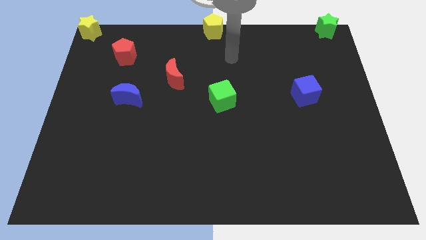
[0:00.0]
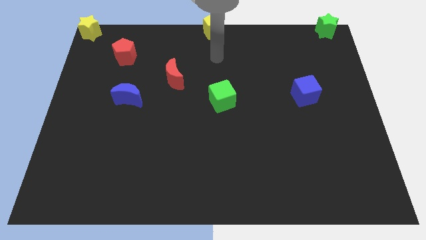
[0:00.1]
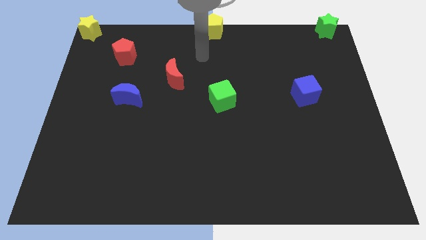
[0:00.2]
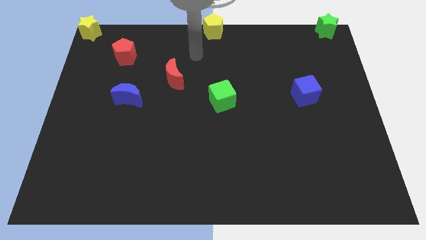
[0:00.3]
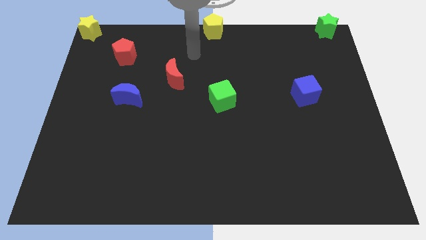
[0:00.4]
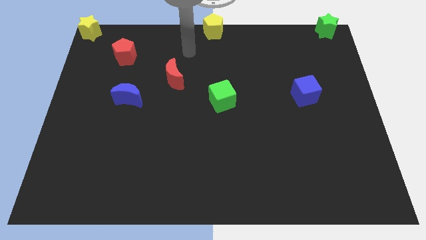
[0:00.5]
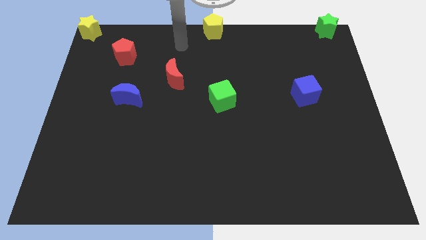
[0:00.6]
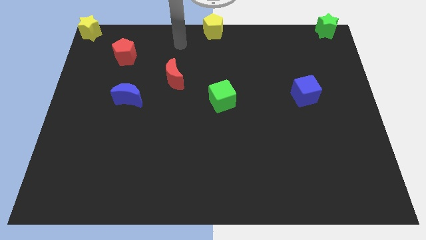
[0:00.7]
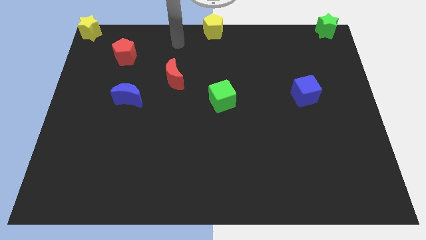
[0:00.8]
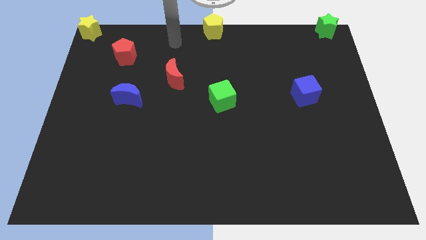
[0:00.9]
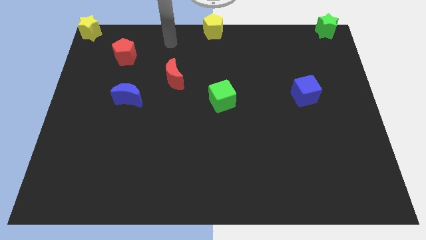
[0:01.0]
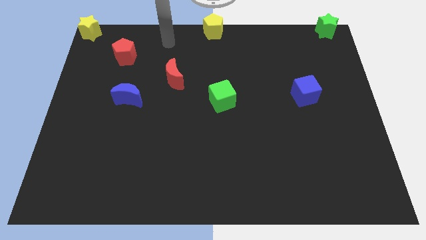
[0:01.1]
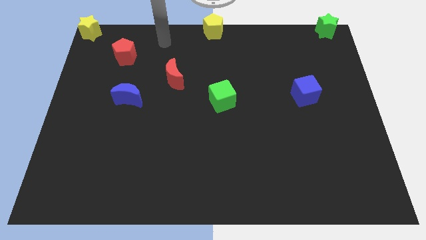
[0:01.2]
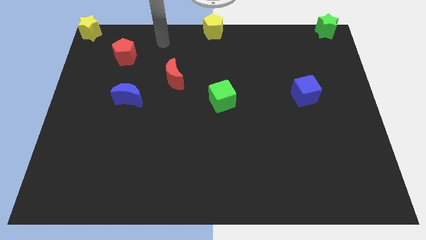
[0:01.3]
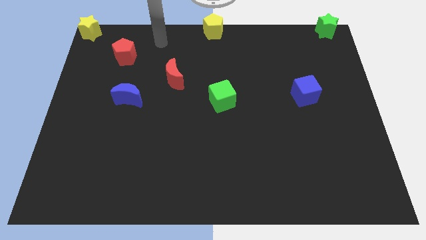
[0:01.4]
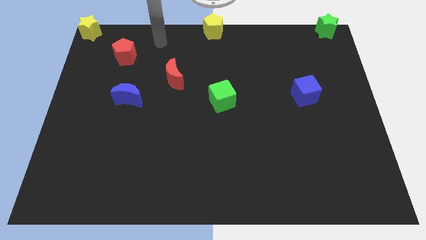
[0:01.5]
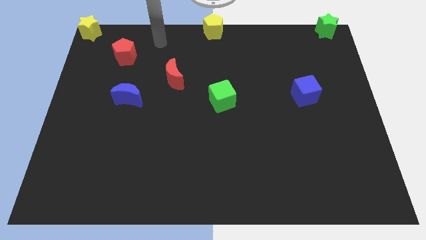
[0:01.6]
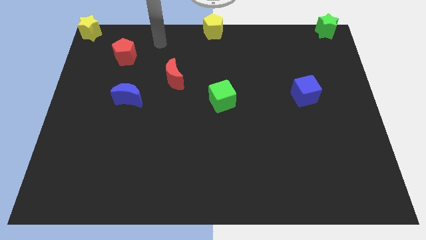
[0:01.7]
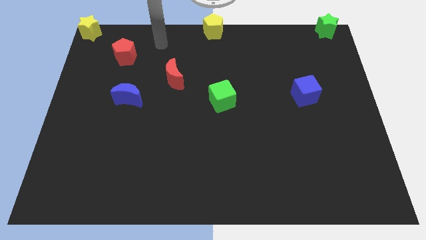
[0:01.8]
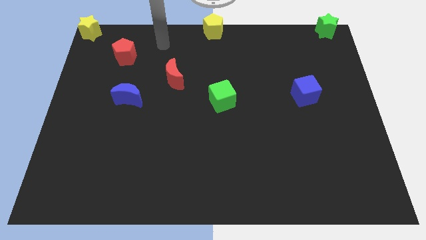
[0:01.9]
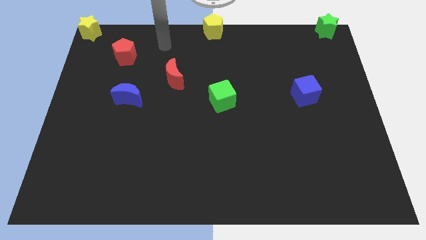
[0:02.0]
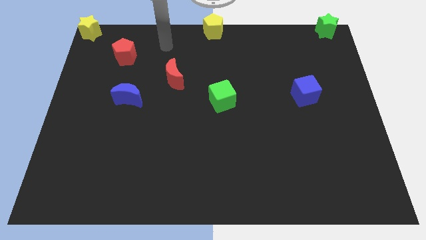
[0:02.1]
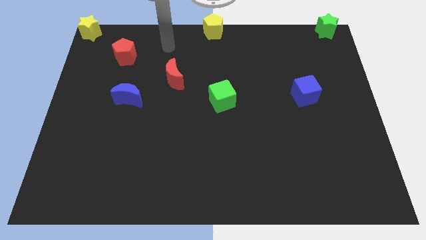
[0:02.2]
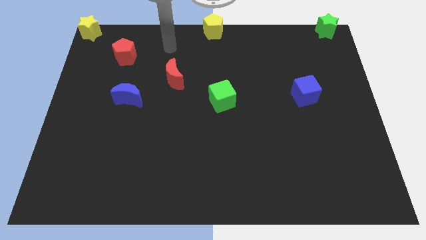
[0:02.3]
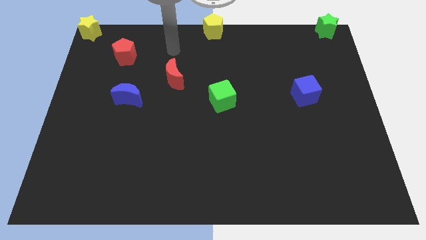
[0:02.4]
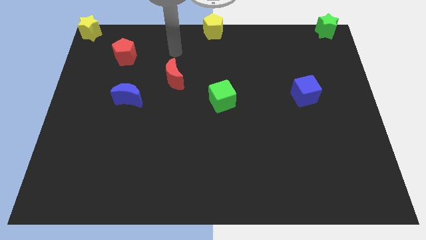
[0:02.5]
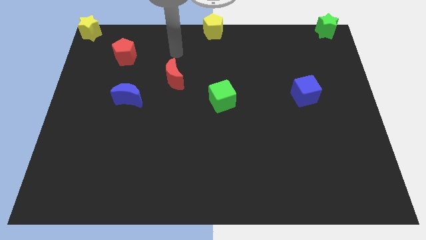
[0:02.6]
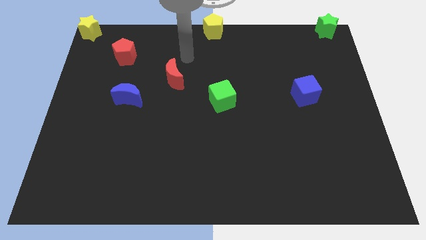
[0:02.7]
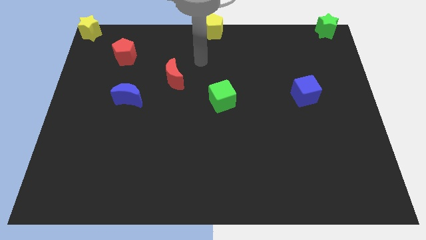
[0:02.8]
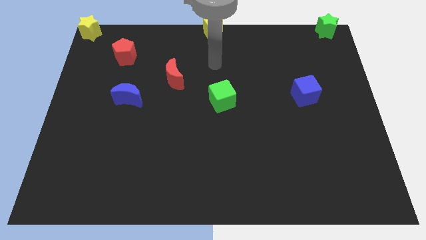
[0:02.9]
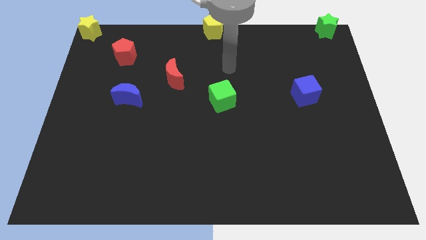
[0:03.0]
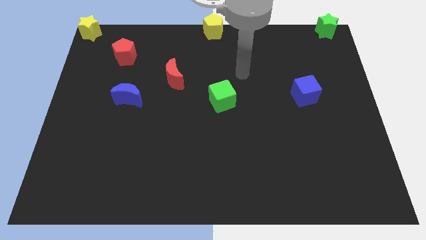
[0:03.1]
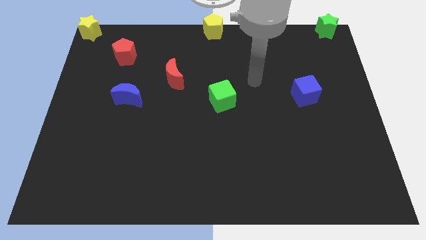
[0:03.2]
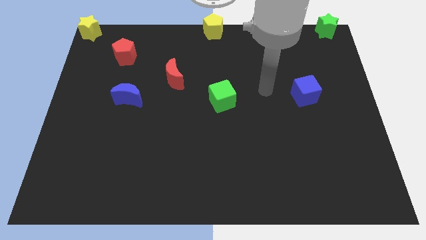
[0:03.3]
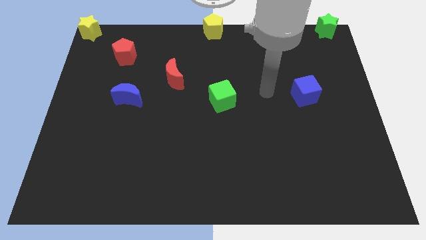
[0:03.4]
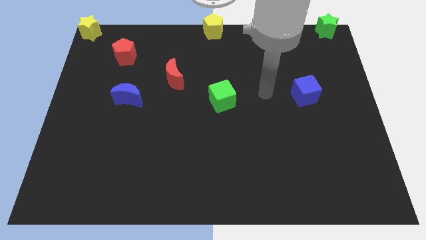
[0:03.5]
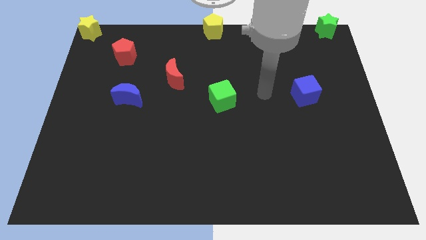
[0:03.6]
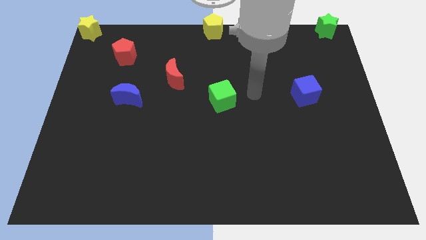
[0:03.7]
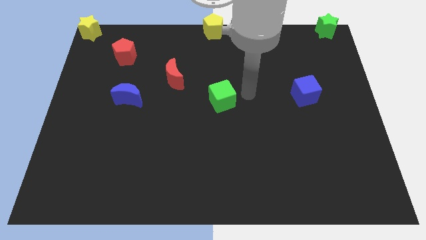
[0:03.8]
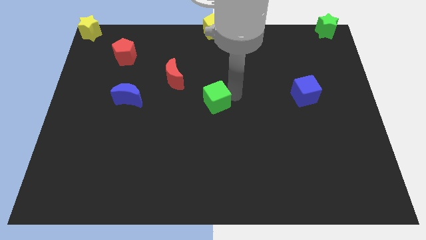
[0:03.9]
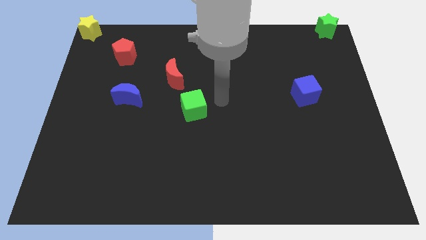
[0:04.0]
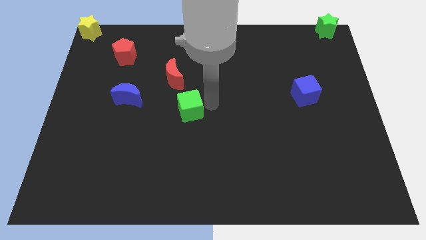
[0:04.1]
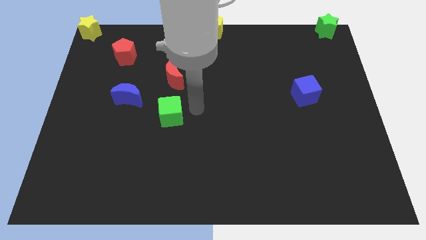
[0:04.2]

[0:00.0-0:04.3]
push green cube below red crescent

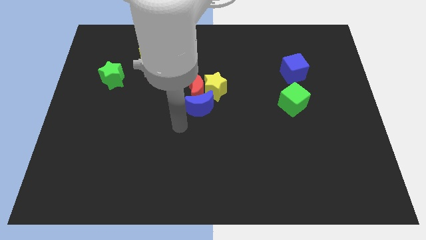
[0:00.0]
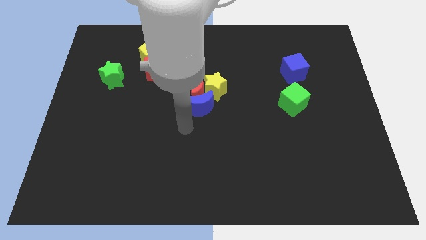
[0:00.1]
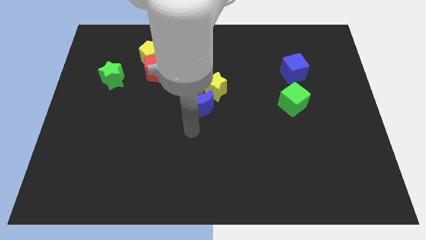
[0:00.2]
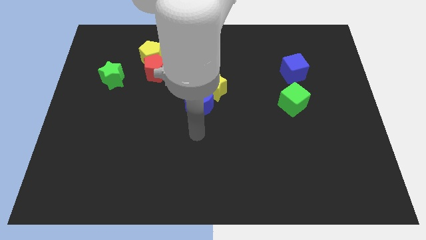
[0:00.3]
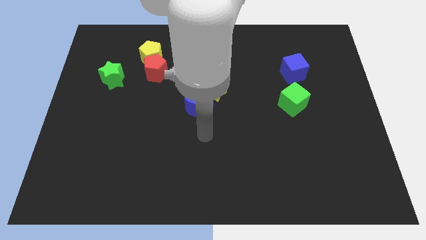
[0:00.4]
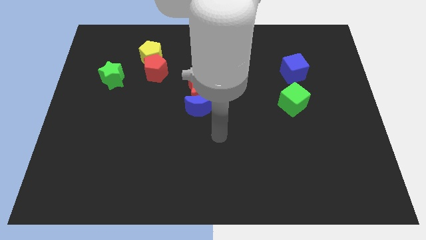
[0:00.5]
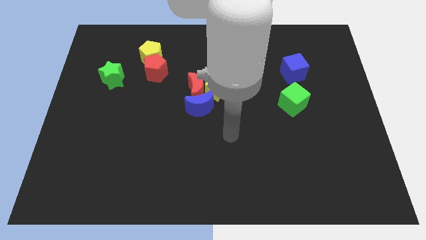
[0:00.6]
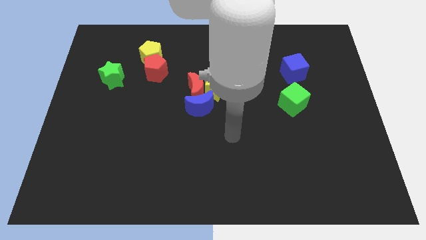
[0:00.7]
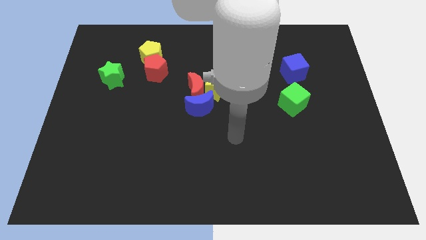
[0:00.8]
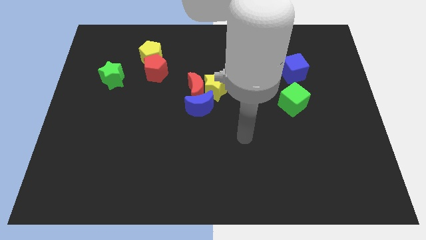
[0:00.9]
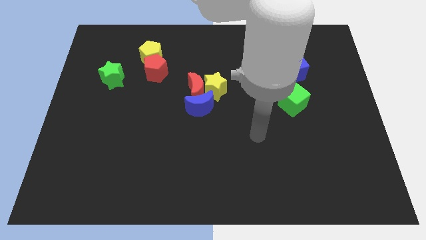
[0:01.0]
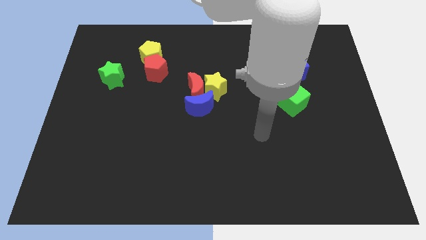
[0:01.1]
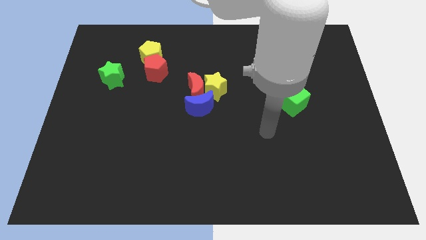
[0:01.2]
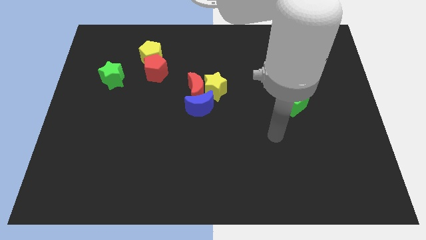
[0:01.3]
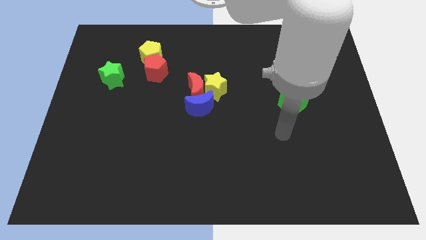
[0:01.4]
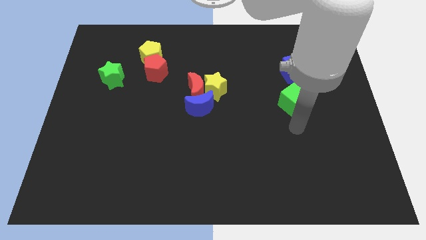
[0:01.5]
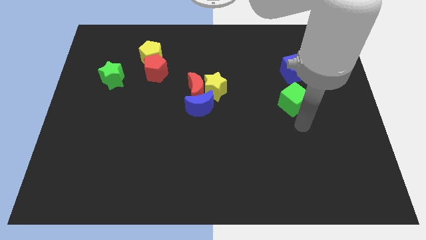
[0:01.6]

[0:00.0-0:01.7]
move the arm under the green cube

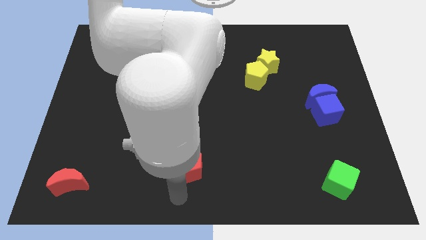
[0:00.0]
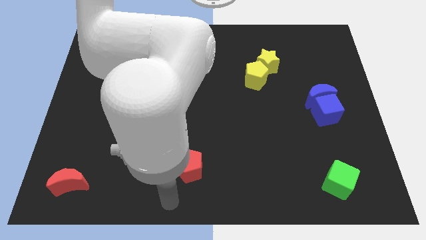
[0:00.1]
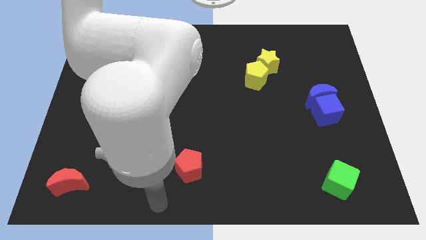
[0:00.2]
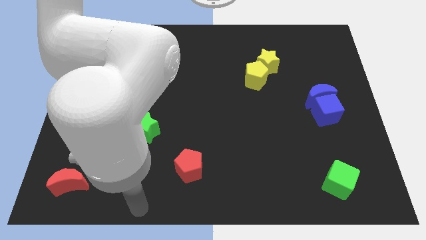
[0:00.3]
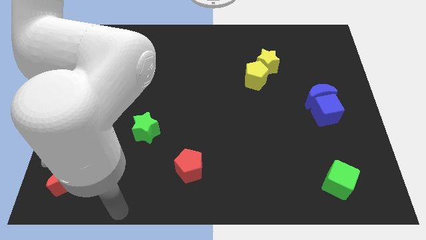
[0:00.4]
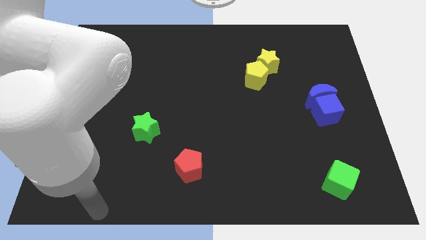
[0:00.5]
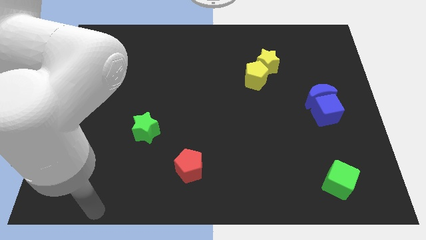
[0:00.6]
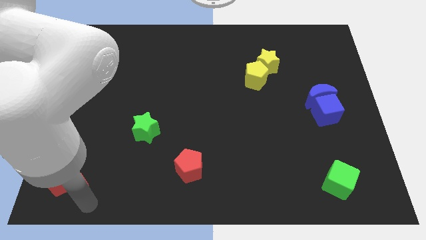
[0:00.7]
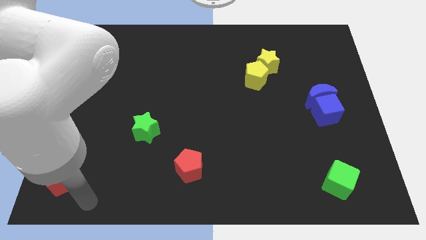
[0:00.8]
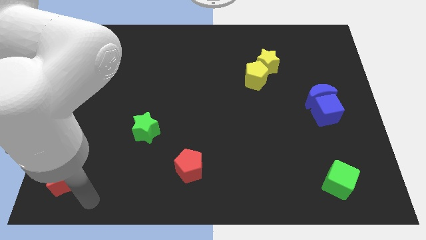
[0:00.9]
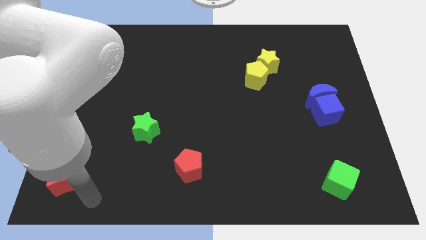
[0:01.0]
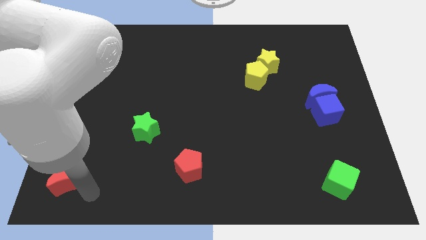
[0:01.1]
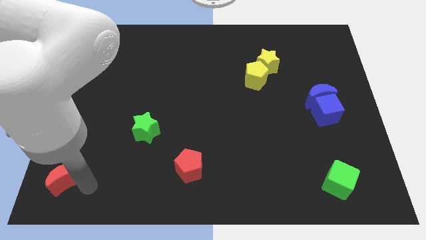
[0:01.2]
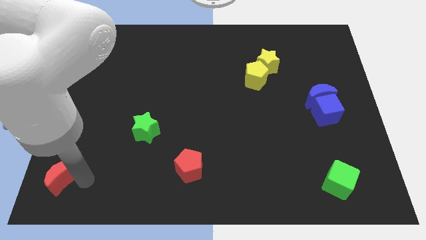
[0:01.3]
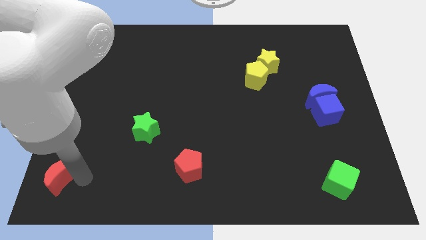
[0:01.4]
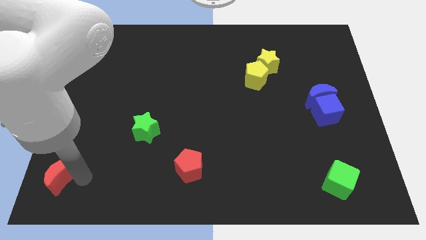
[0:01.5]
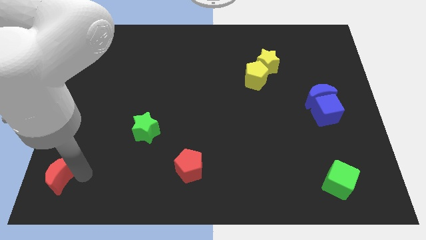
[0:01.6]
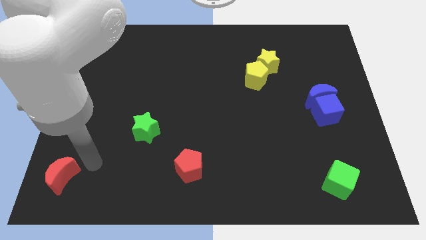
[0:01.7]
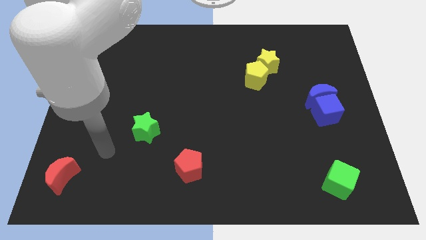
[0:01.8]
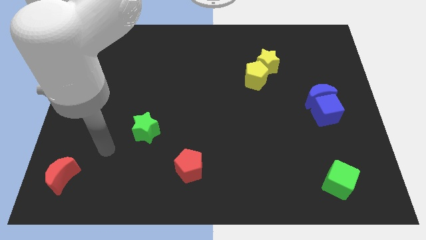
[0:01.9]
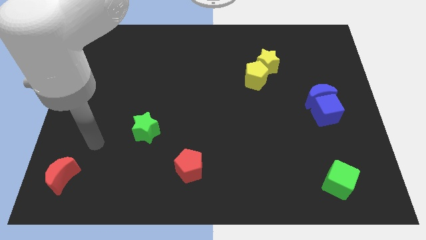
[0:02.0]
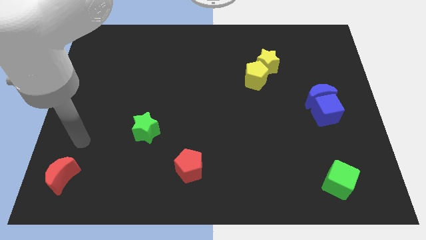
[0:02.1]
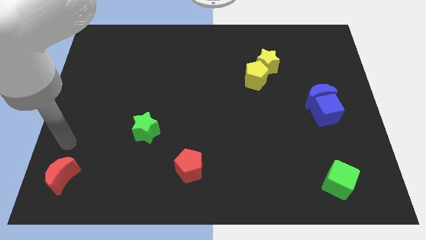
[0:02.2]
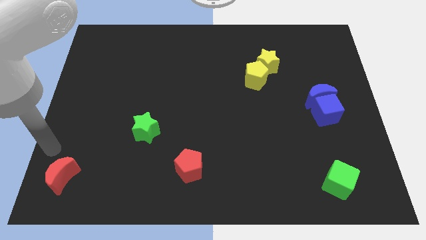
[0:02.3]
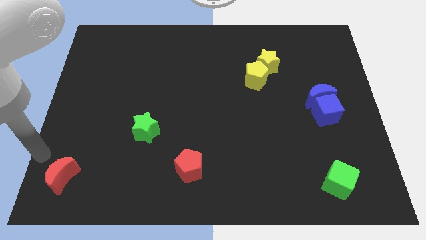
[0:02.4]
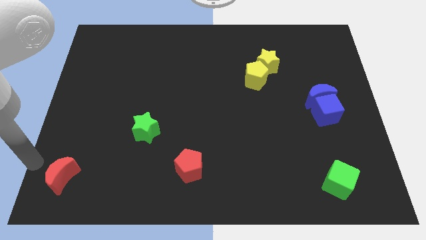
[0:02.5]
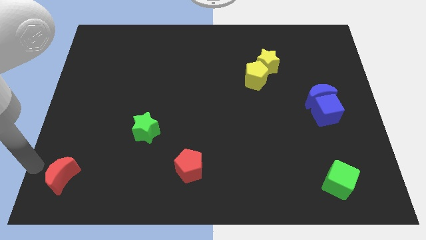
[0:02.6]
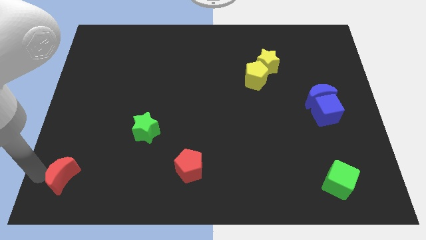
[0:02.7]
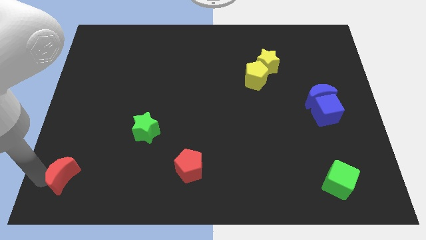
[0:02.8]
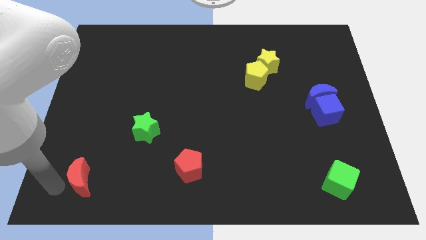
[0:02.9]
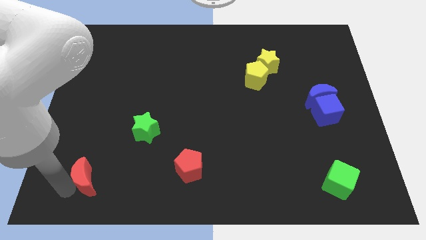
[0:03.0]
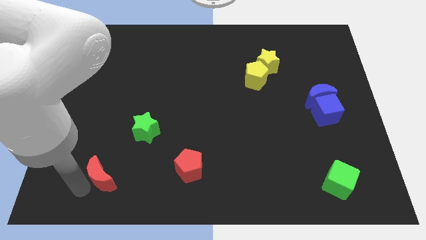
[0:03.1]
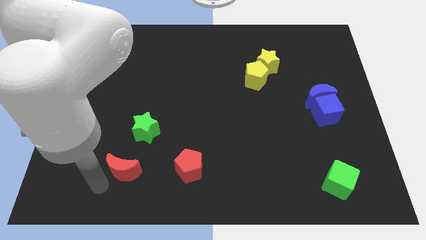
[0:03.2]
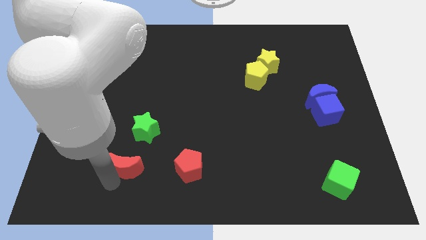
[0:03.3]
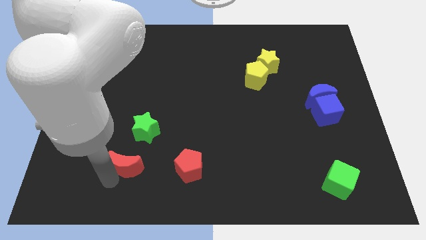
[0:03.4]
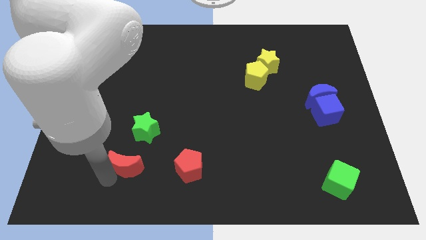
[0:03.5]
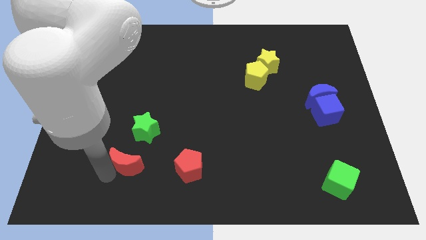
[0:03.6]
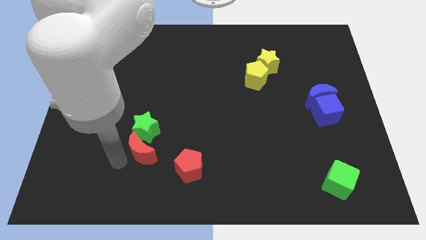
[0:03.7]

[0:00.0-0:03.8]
move the red crescent to the bottom of the green star
